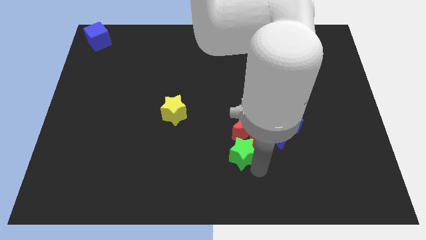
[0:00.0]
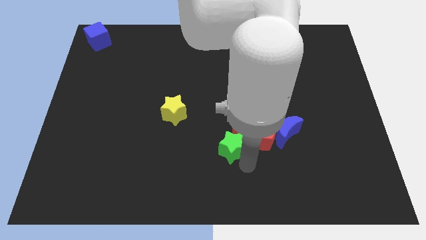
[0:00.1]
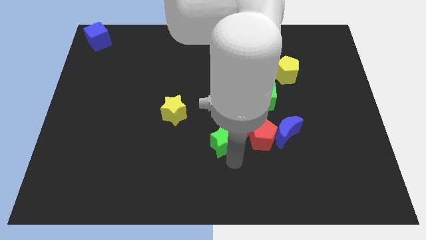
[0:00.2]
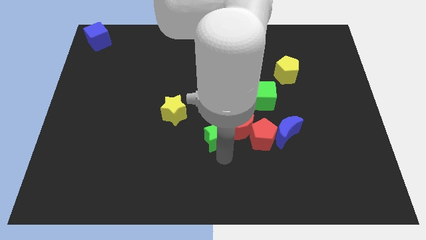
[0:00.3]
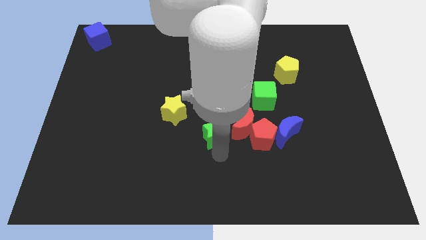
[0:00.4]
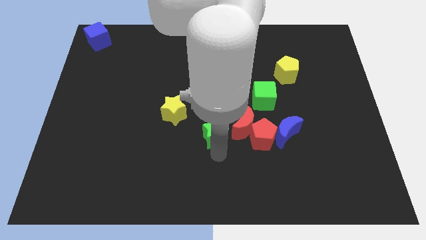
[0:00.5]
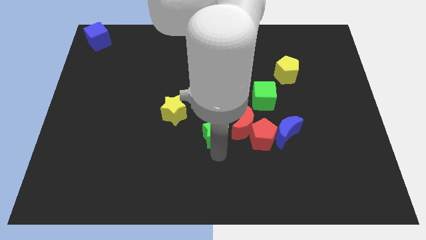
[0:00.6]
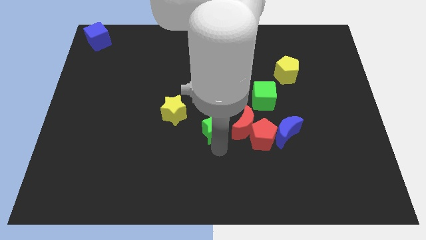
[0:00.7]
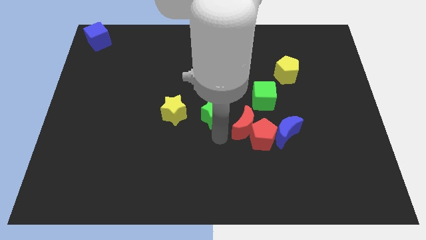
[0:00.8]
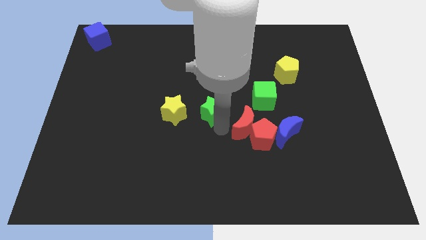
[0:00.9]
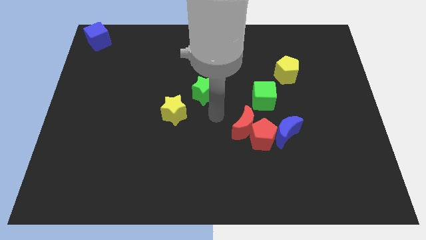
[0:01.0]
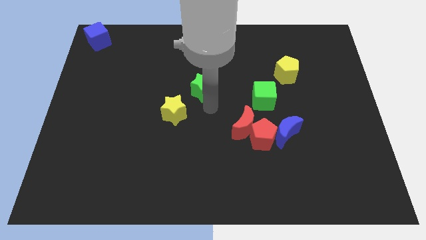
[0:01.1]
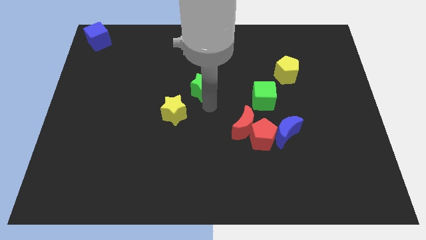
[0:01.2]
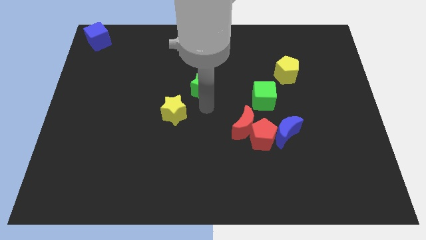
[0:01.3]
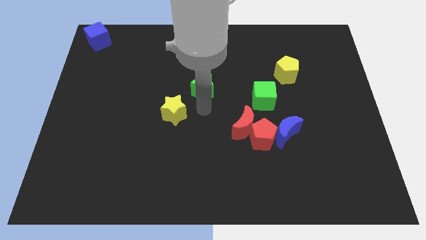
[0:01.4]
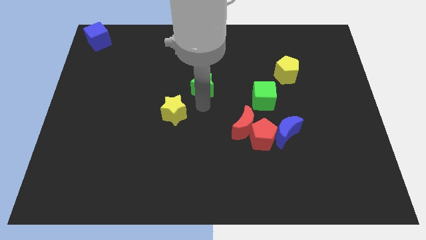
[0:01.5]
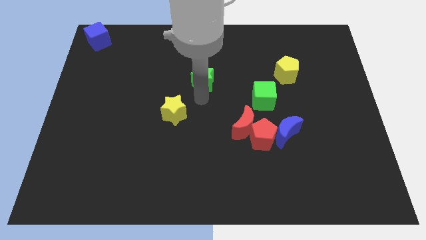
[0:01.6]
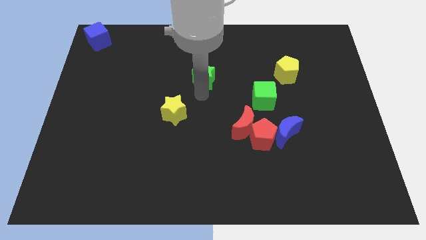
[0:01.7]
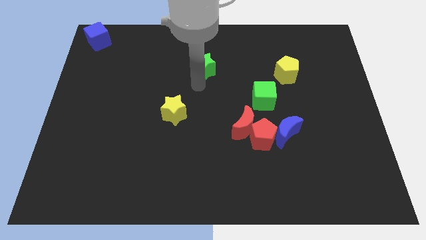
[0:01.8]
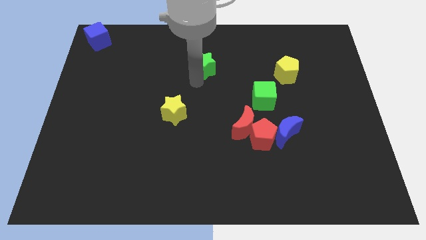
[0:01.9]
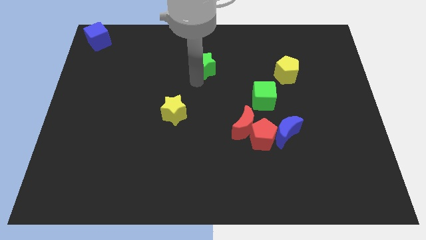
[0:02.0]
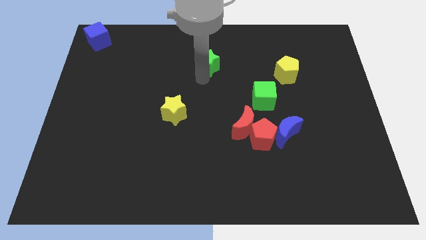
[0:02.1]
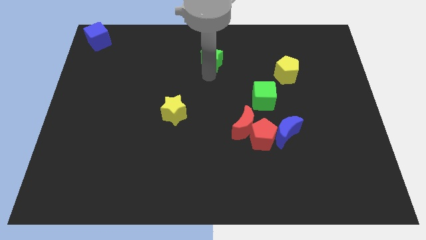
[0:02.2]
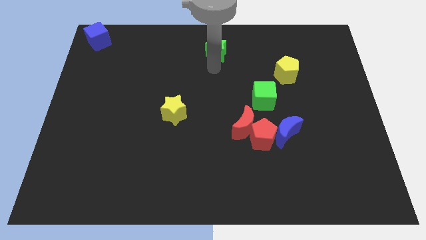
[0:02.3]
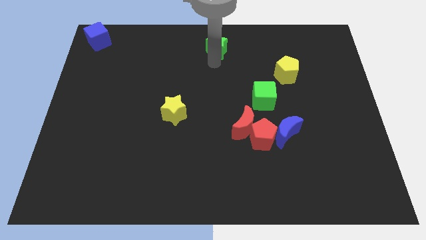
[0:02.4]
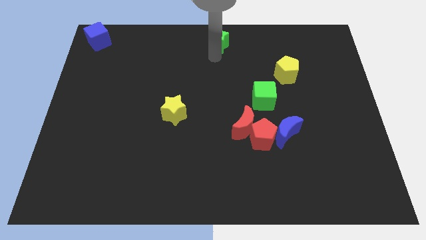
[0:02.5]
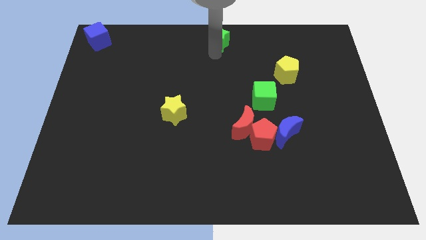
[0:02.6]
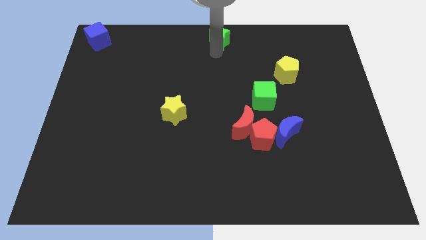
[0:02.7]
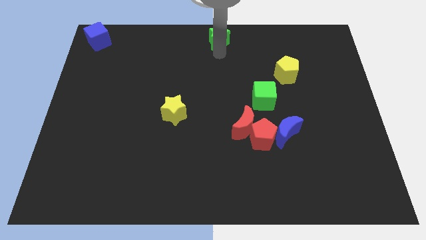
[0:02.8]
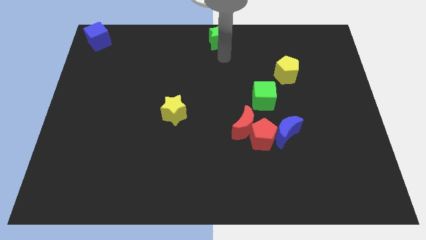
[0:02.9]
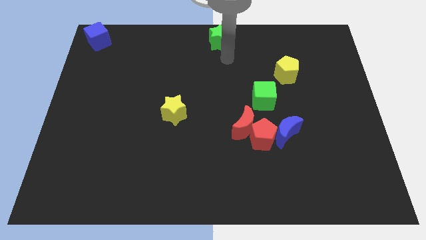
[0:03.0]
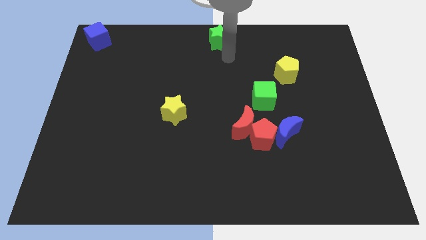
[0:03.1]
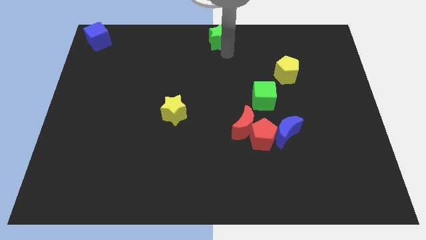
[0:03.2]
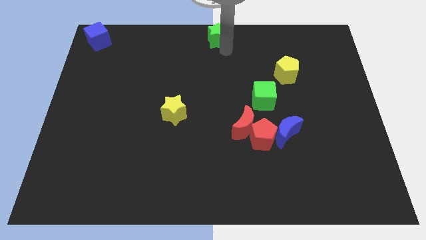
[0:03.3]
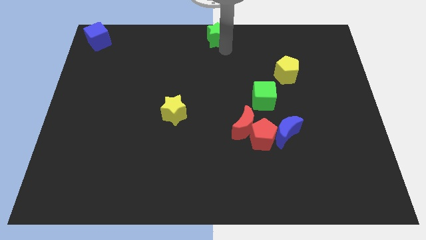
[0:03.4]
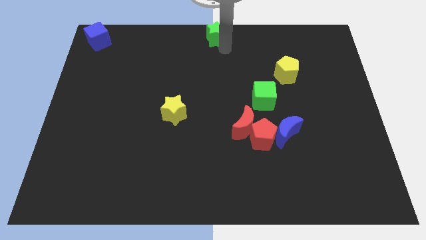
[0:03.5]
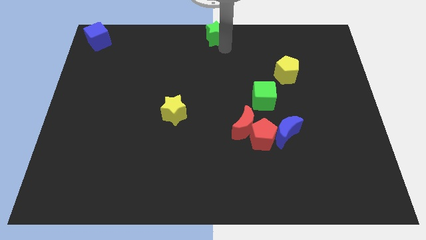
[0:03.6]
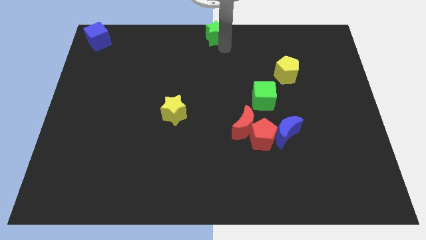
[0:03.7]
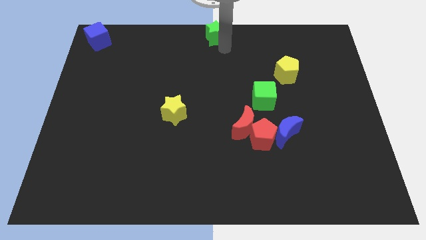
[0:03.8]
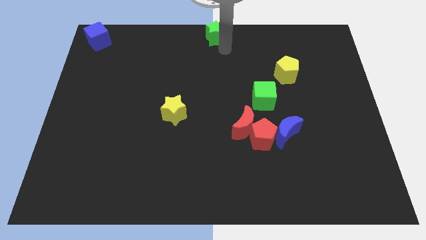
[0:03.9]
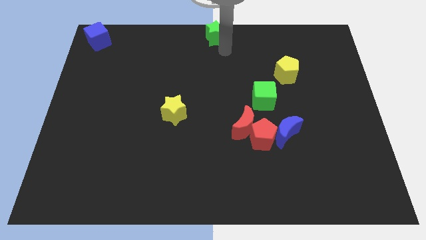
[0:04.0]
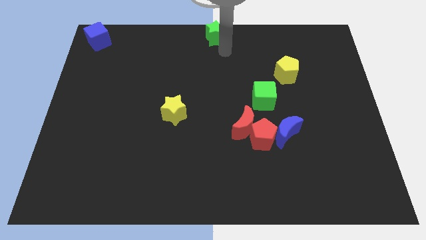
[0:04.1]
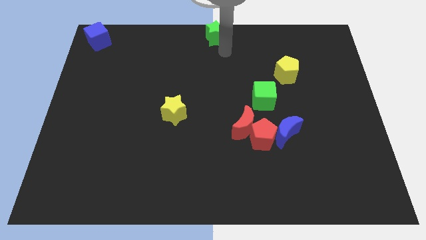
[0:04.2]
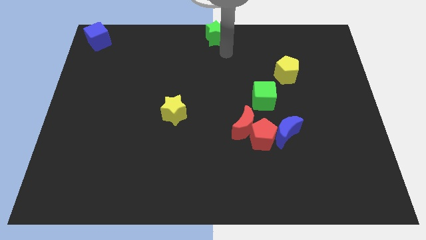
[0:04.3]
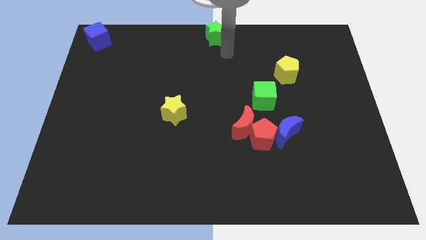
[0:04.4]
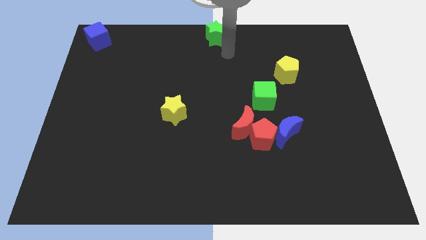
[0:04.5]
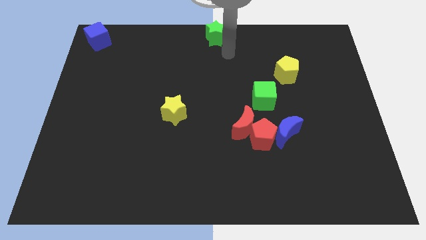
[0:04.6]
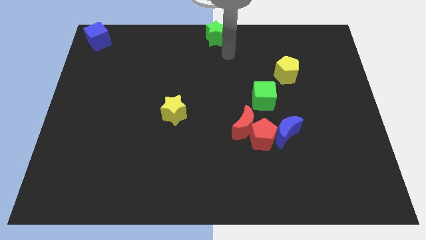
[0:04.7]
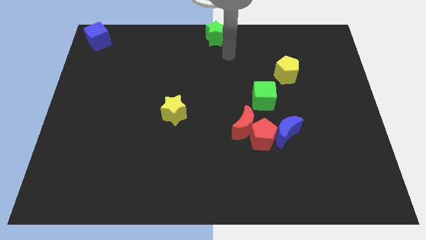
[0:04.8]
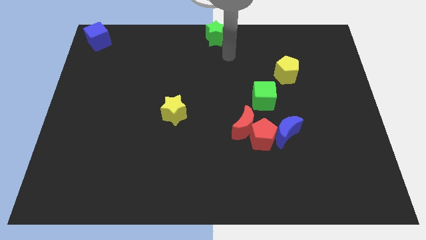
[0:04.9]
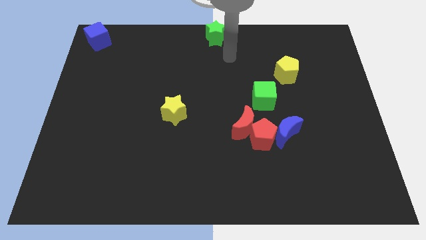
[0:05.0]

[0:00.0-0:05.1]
move the green star to the top center of the board

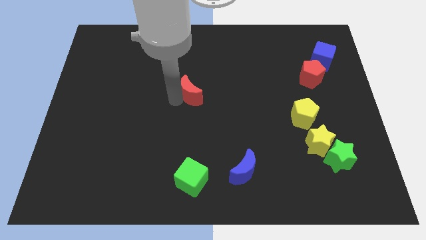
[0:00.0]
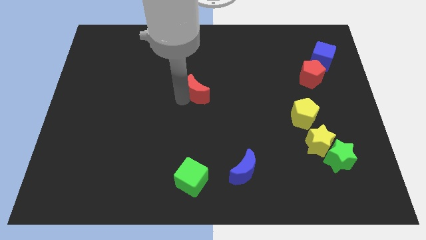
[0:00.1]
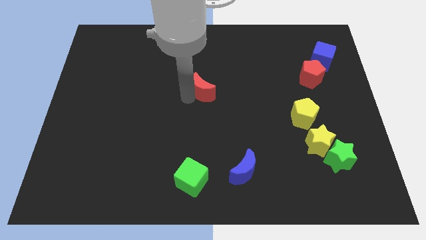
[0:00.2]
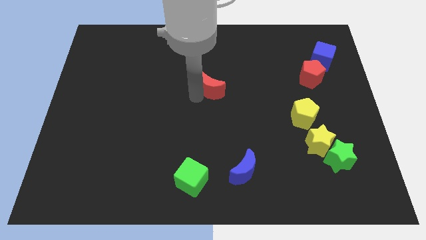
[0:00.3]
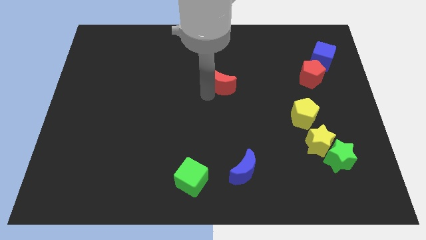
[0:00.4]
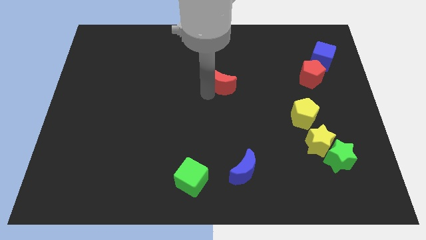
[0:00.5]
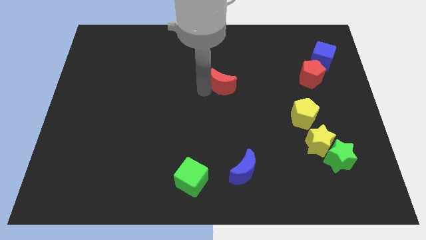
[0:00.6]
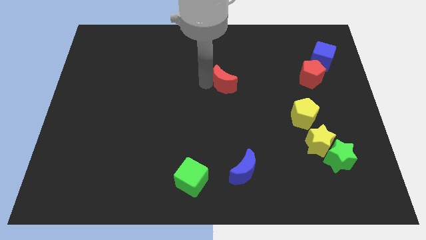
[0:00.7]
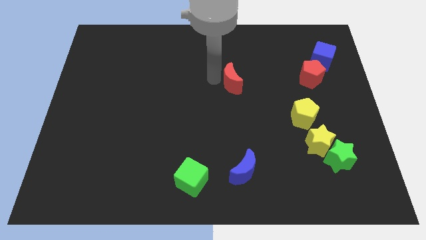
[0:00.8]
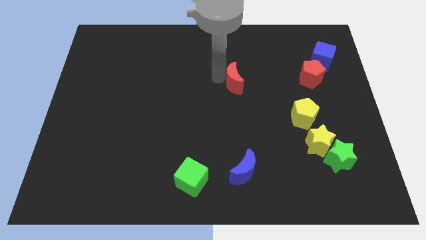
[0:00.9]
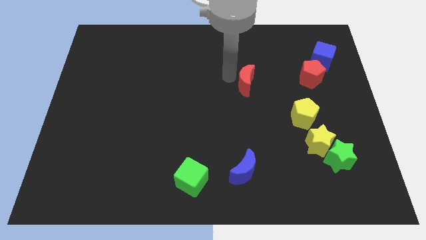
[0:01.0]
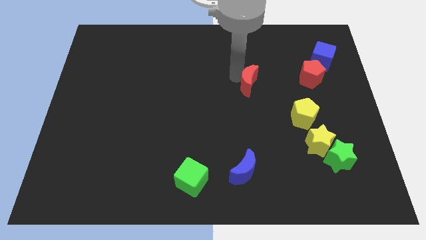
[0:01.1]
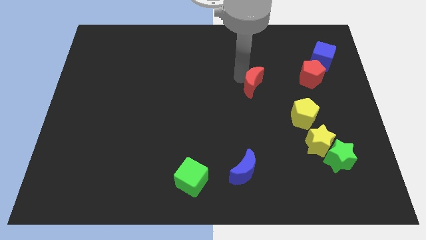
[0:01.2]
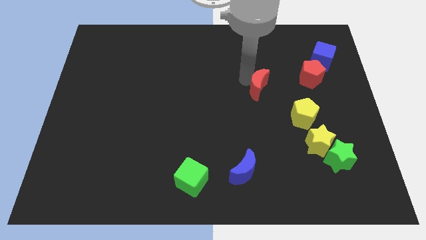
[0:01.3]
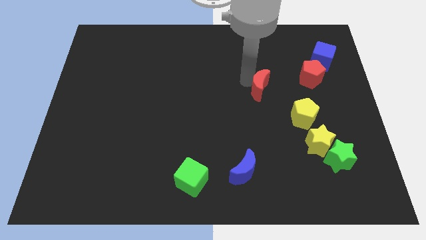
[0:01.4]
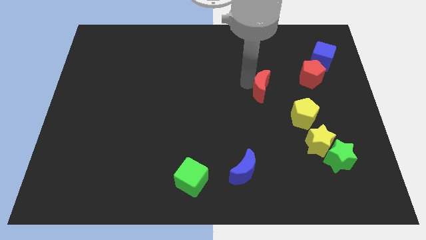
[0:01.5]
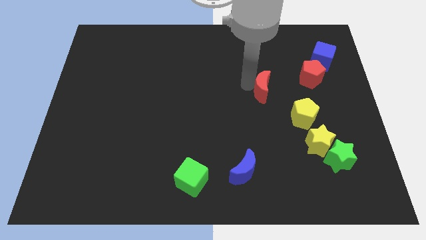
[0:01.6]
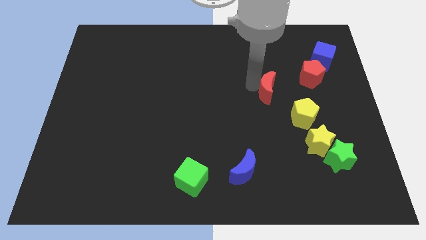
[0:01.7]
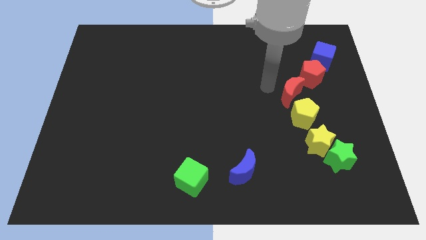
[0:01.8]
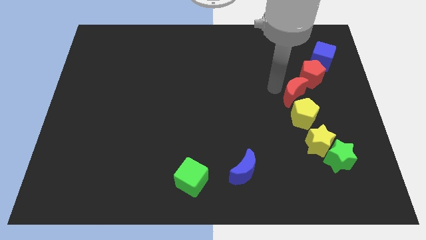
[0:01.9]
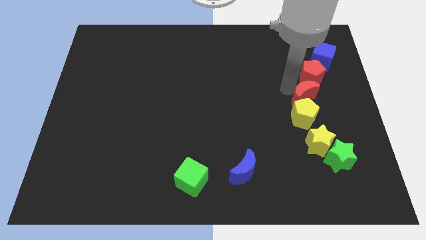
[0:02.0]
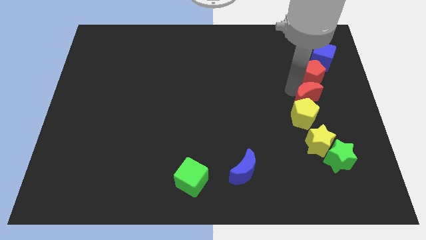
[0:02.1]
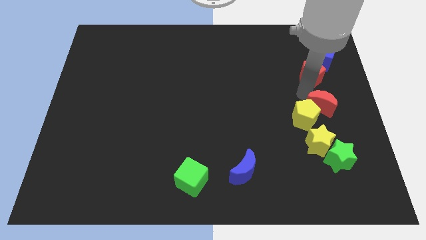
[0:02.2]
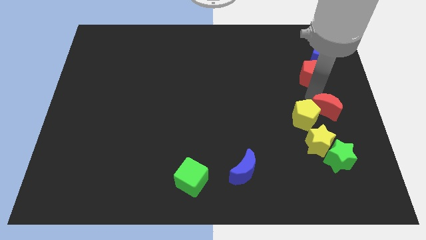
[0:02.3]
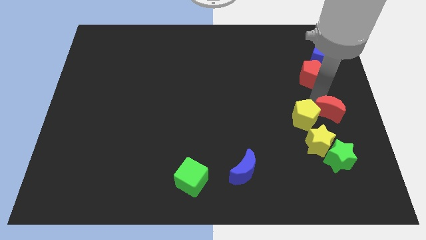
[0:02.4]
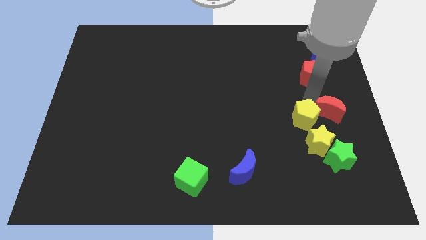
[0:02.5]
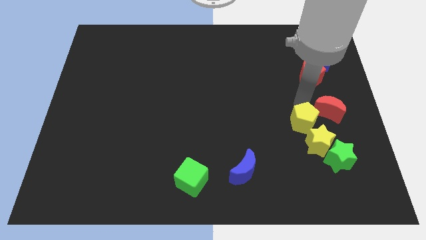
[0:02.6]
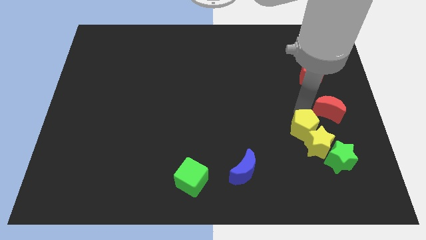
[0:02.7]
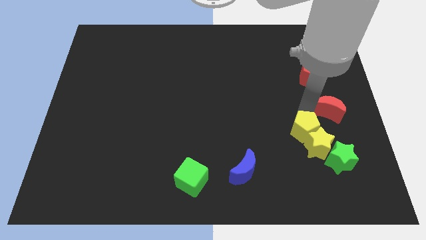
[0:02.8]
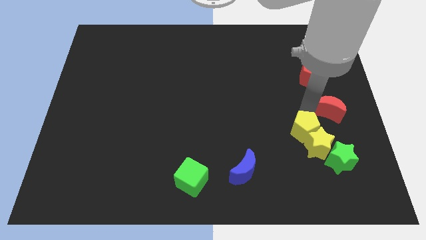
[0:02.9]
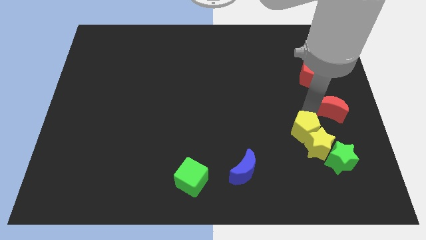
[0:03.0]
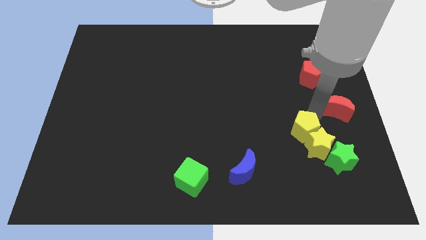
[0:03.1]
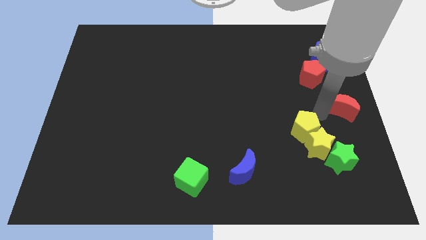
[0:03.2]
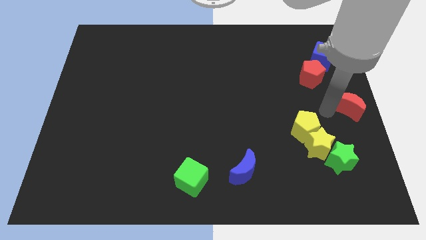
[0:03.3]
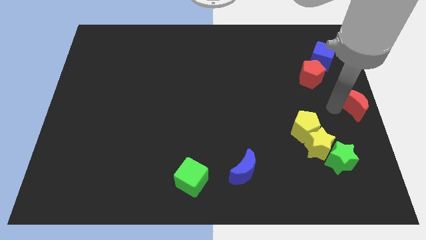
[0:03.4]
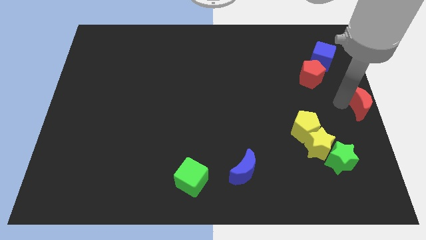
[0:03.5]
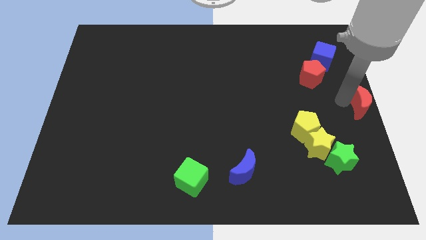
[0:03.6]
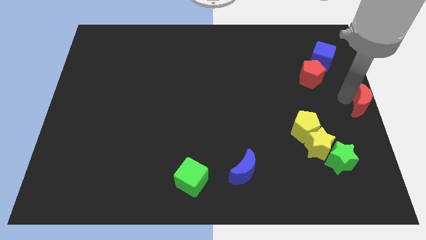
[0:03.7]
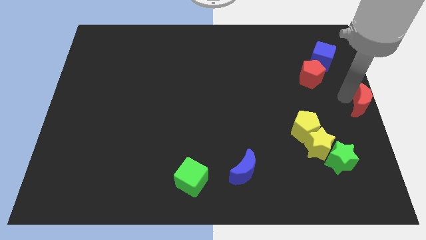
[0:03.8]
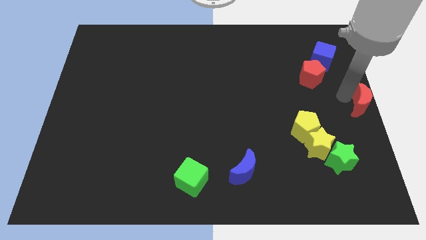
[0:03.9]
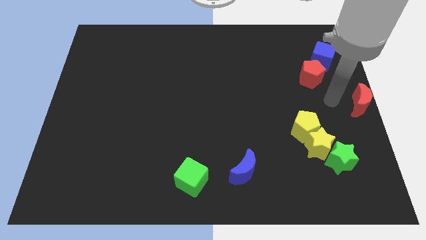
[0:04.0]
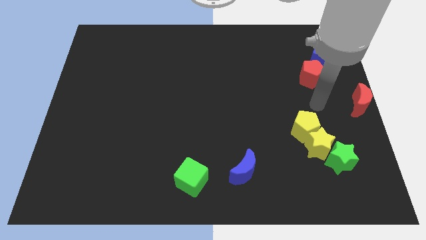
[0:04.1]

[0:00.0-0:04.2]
push the red crescent to the right center of the board
